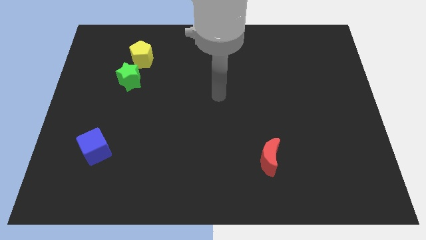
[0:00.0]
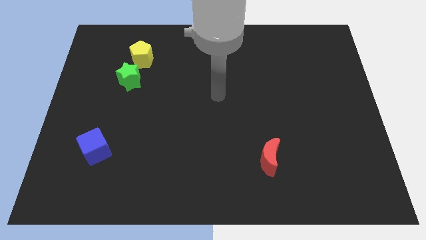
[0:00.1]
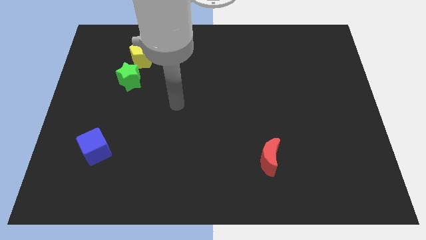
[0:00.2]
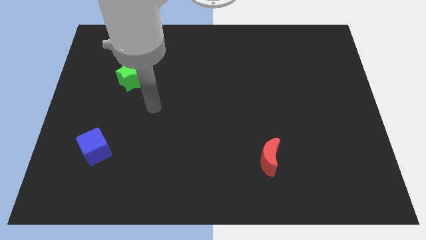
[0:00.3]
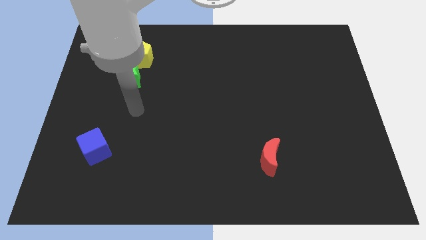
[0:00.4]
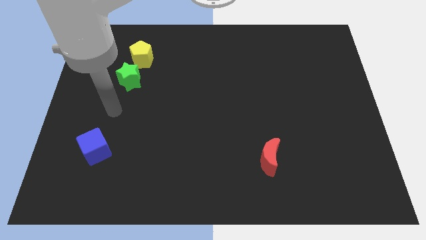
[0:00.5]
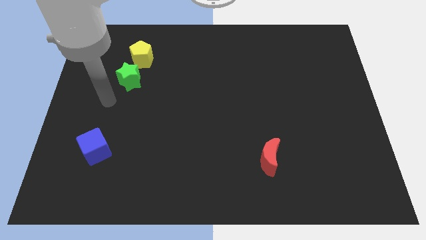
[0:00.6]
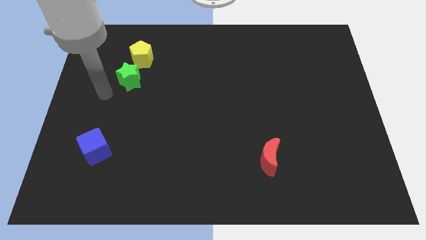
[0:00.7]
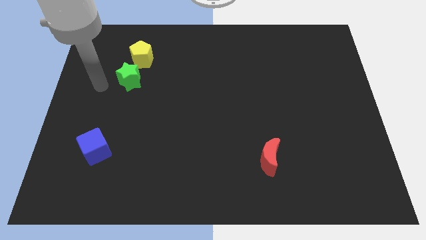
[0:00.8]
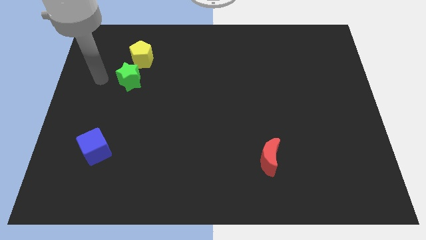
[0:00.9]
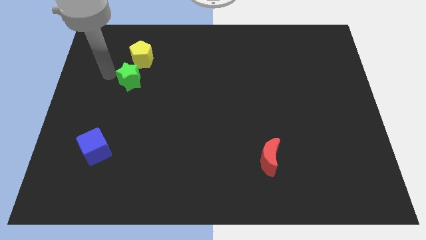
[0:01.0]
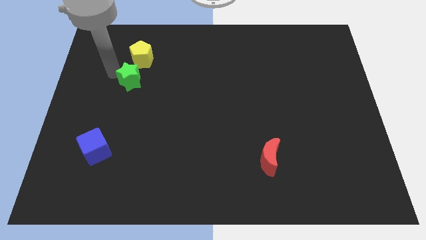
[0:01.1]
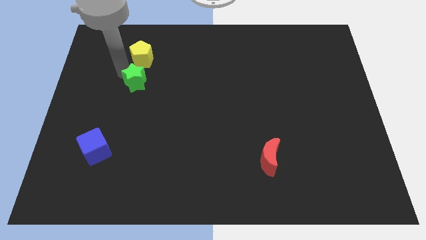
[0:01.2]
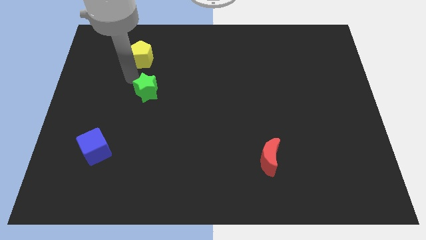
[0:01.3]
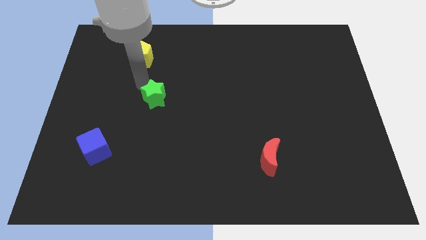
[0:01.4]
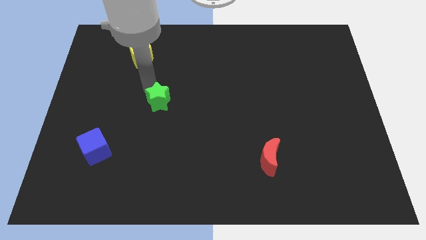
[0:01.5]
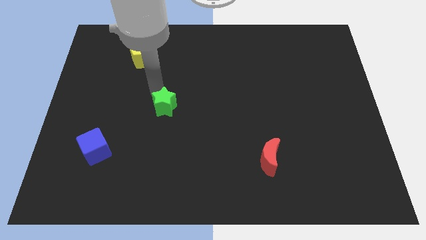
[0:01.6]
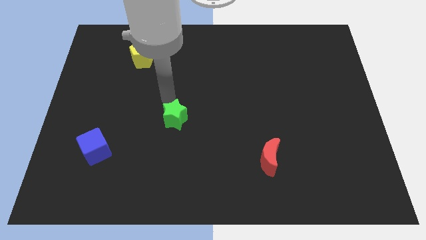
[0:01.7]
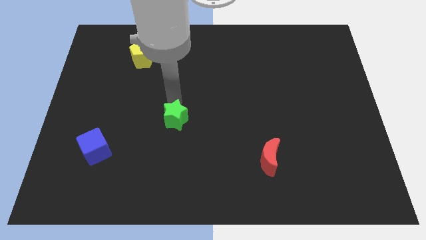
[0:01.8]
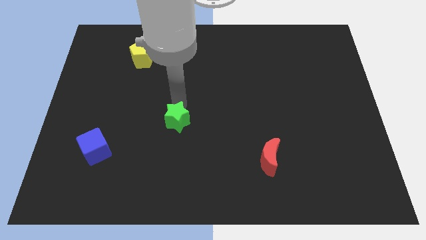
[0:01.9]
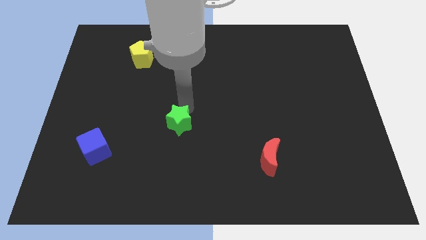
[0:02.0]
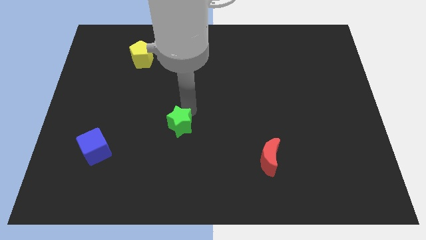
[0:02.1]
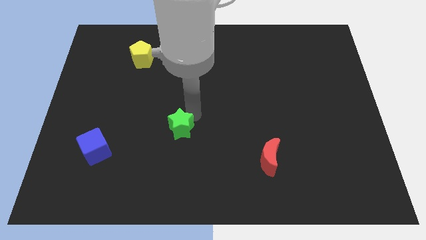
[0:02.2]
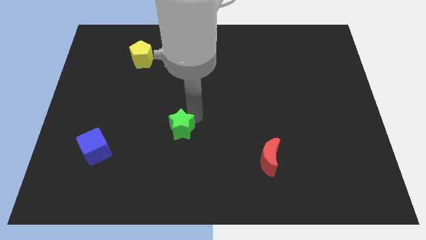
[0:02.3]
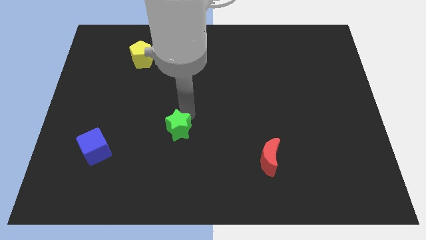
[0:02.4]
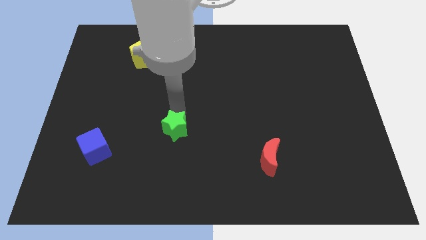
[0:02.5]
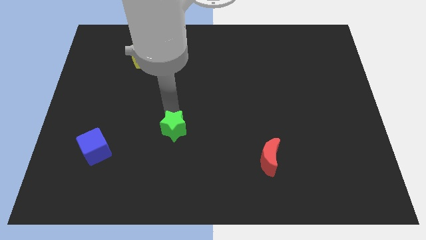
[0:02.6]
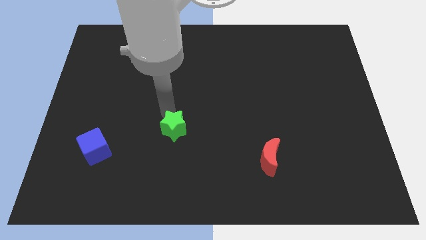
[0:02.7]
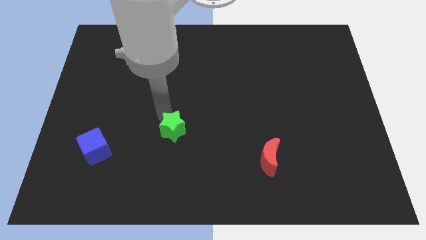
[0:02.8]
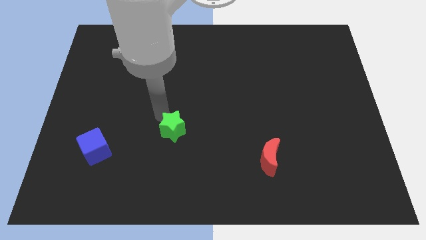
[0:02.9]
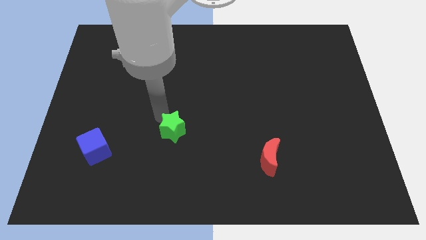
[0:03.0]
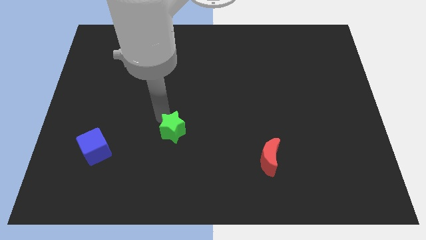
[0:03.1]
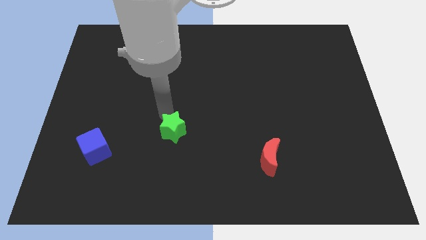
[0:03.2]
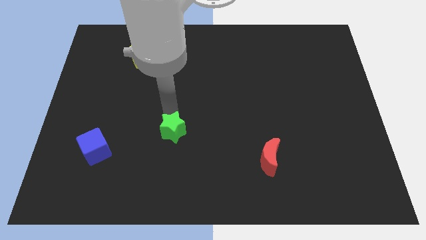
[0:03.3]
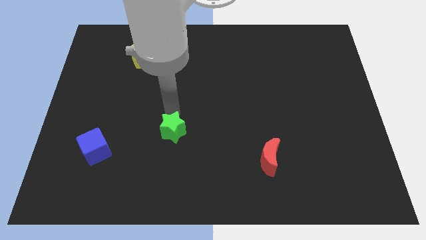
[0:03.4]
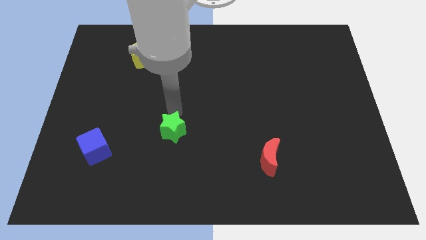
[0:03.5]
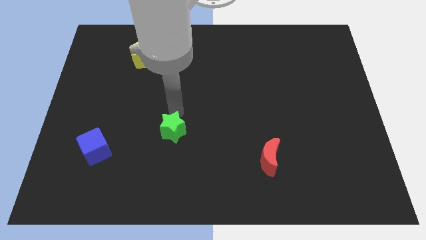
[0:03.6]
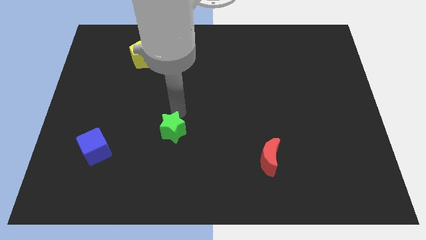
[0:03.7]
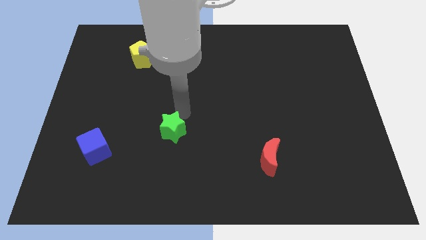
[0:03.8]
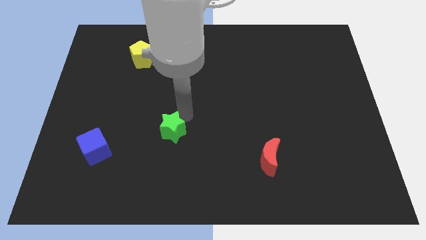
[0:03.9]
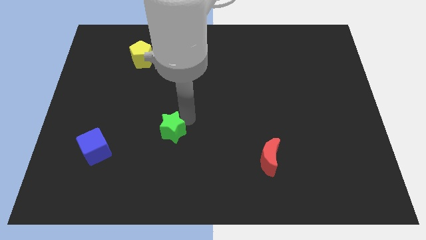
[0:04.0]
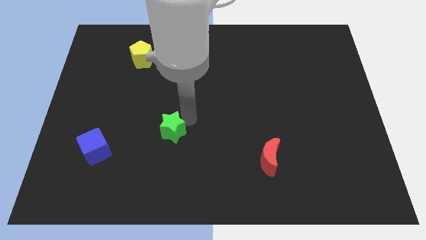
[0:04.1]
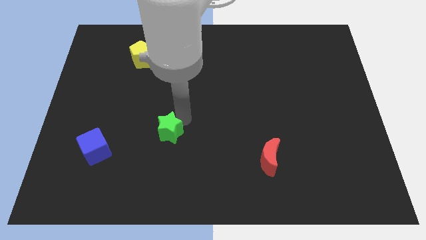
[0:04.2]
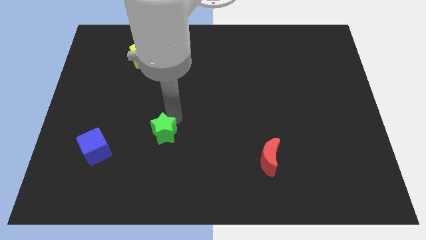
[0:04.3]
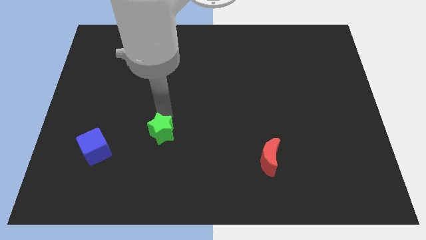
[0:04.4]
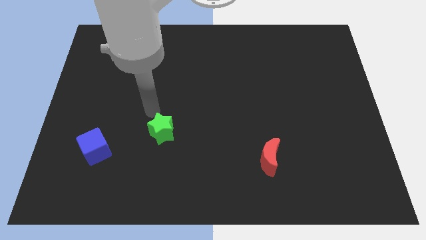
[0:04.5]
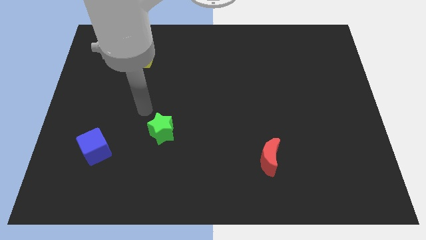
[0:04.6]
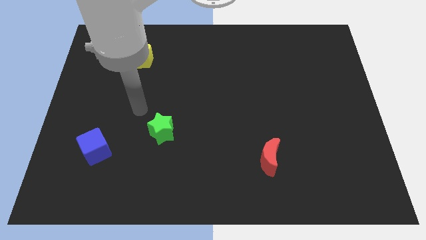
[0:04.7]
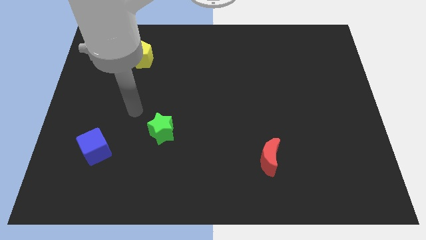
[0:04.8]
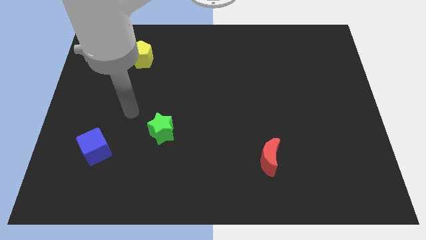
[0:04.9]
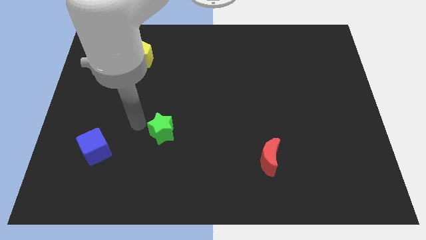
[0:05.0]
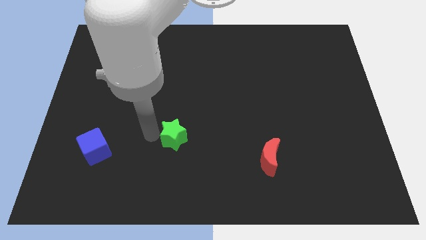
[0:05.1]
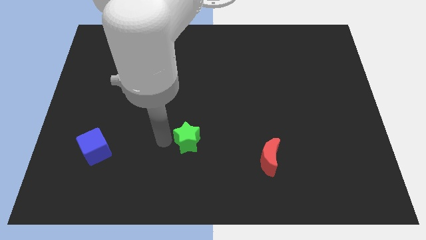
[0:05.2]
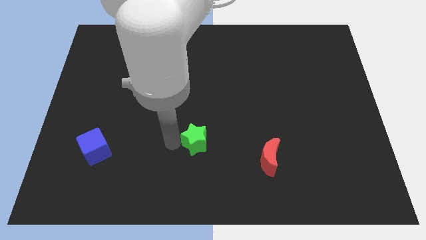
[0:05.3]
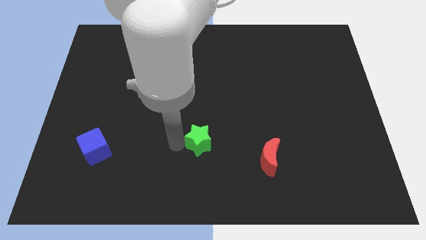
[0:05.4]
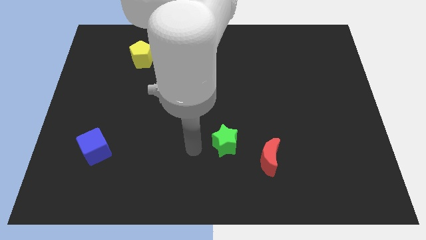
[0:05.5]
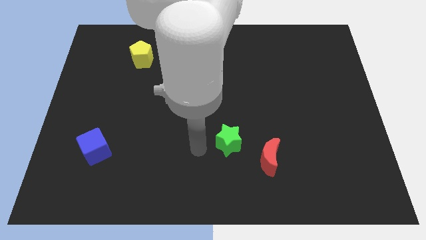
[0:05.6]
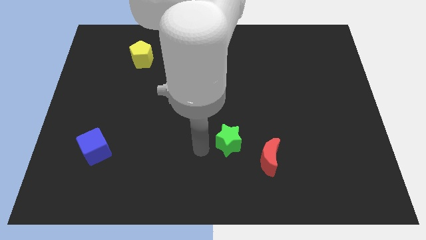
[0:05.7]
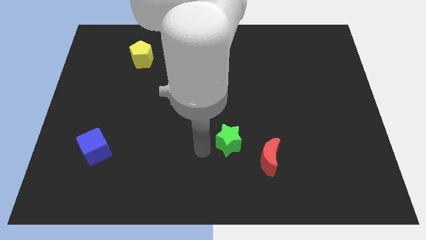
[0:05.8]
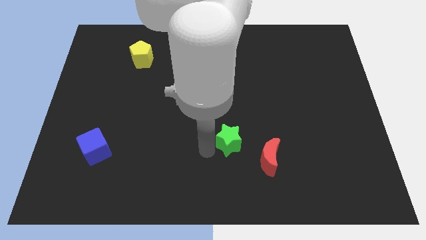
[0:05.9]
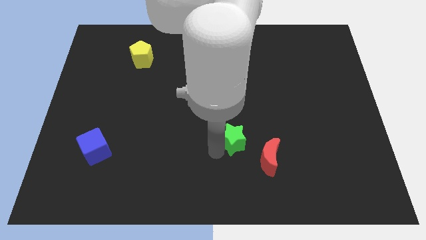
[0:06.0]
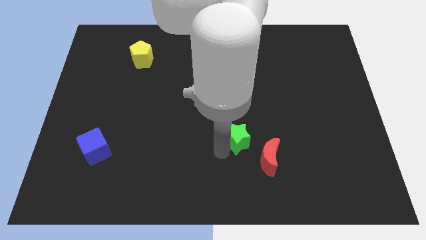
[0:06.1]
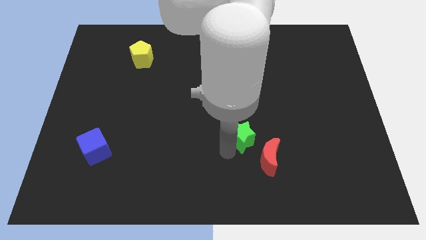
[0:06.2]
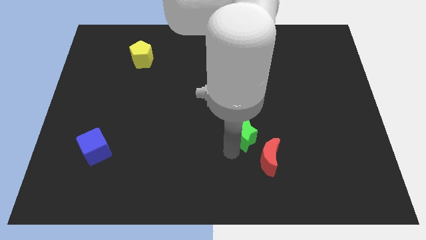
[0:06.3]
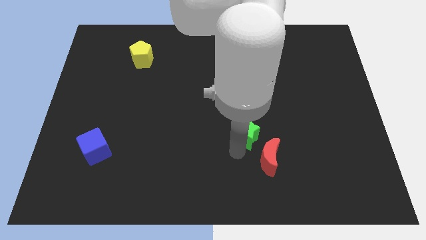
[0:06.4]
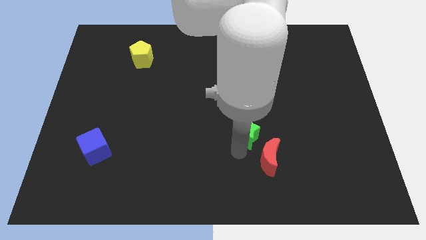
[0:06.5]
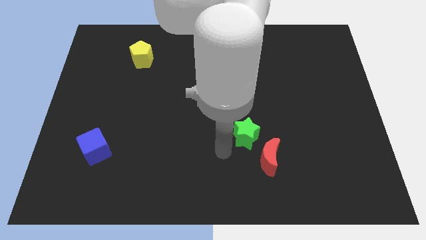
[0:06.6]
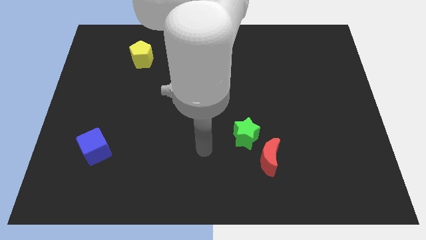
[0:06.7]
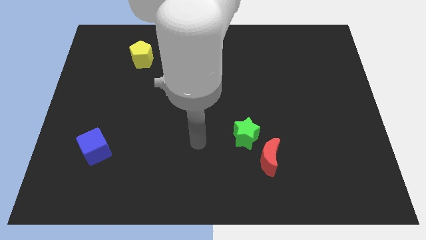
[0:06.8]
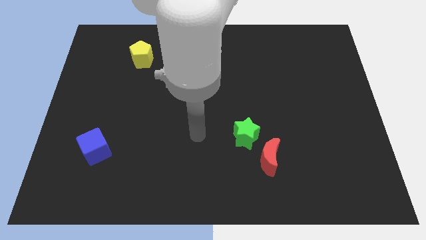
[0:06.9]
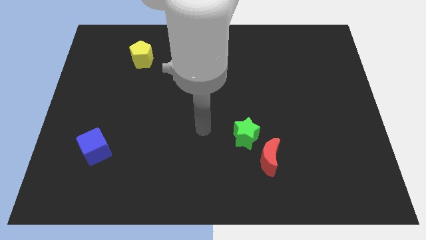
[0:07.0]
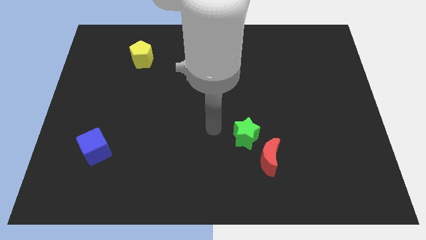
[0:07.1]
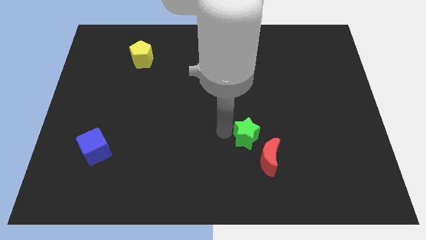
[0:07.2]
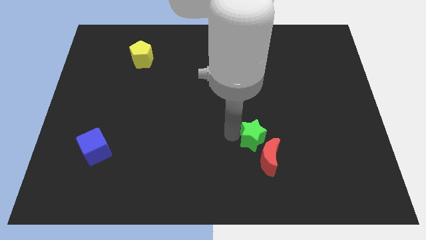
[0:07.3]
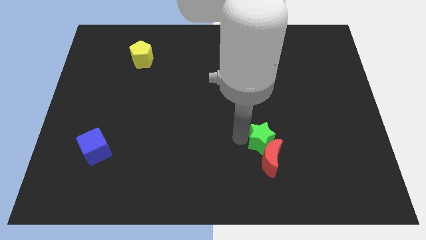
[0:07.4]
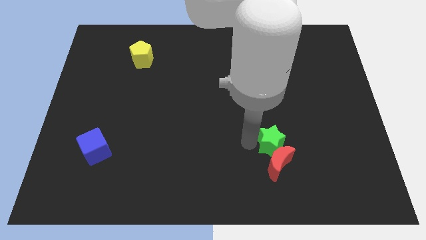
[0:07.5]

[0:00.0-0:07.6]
move the green star to the moon

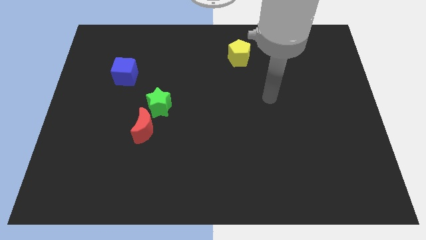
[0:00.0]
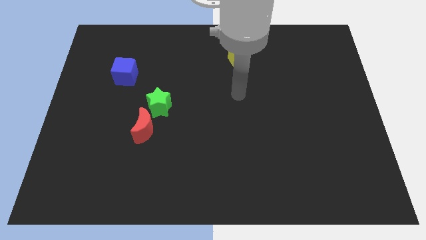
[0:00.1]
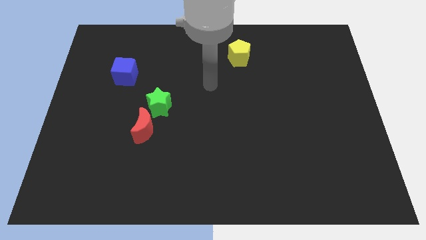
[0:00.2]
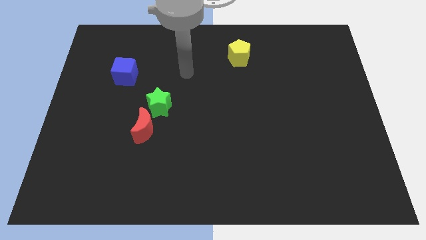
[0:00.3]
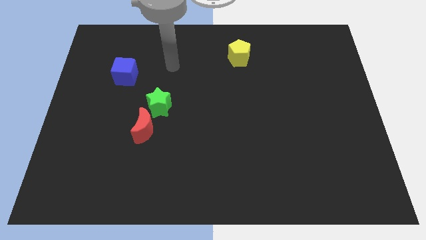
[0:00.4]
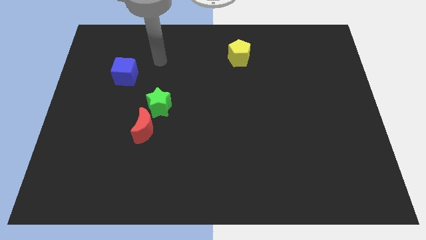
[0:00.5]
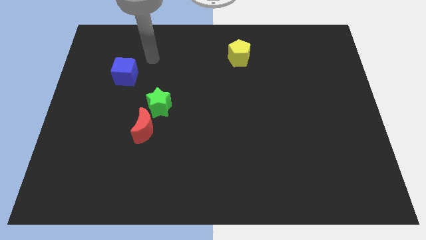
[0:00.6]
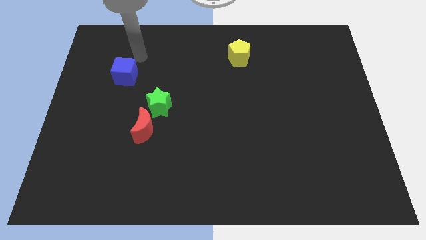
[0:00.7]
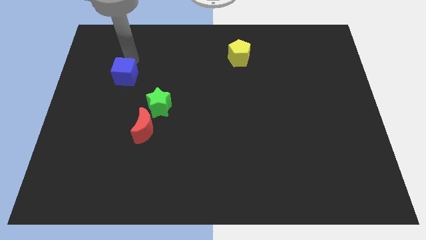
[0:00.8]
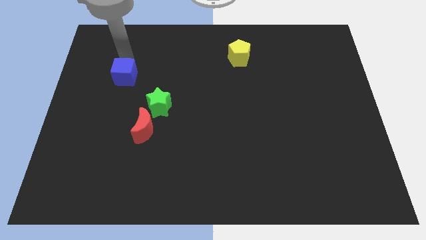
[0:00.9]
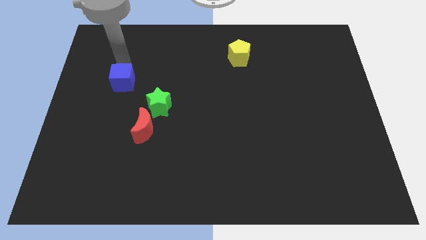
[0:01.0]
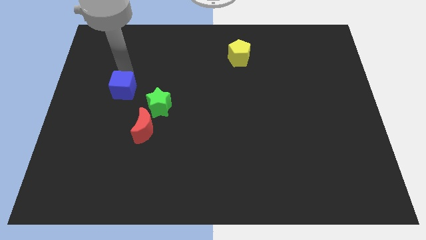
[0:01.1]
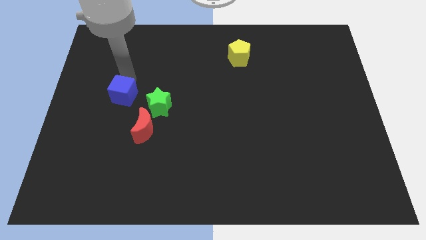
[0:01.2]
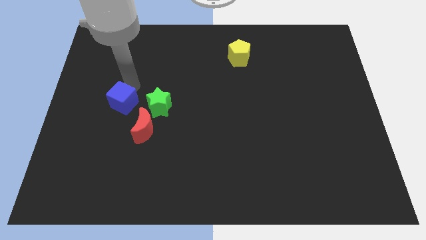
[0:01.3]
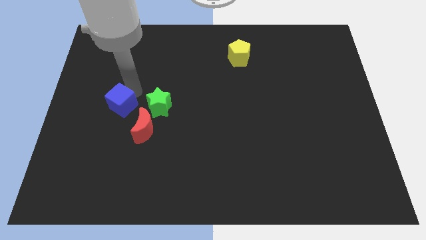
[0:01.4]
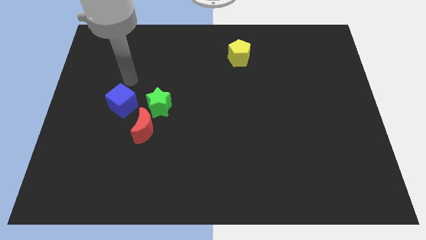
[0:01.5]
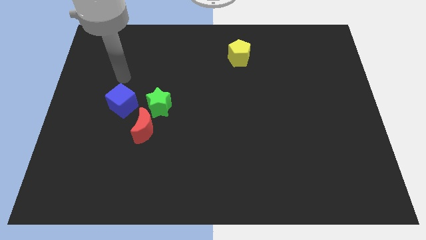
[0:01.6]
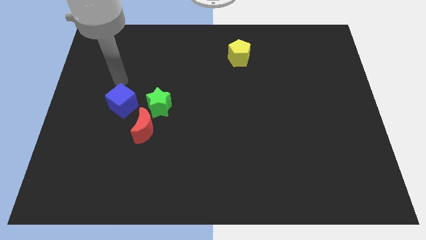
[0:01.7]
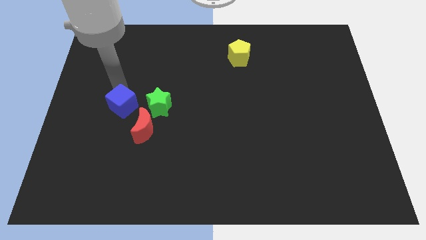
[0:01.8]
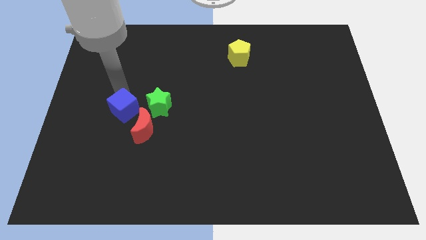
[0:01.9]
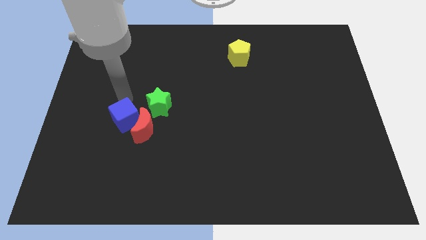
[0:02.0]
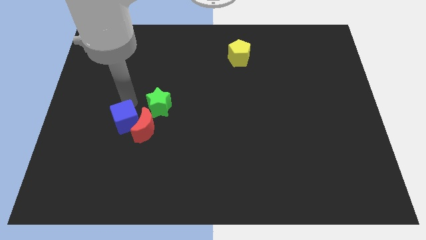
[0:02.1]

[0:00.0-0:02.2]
push the blue cube towards the red block
